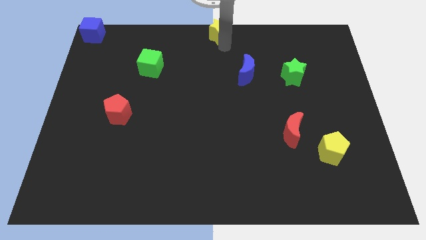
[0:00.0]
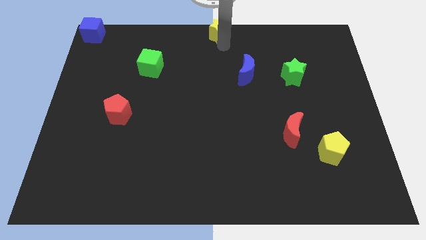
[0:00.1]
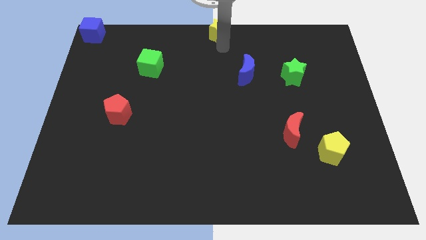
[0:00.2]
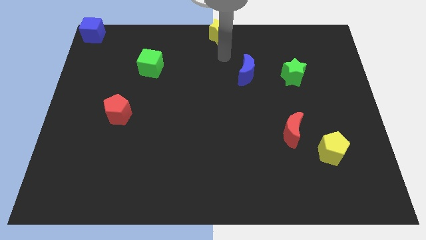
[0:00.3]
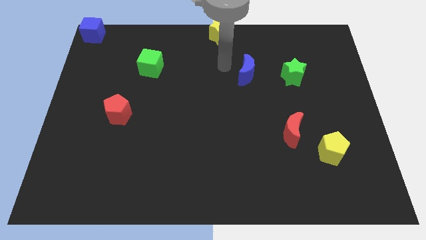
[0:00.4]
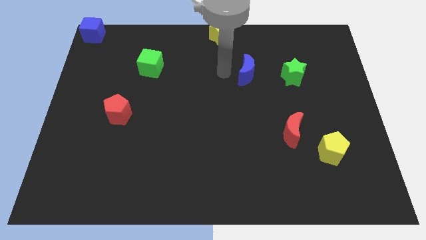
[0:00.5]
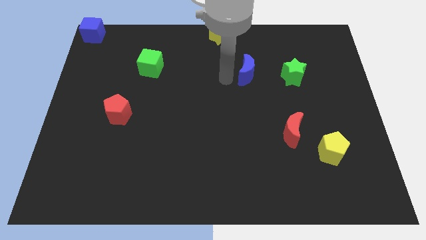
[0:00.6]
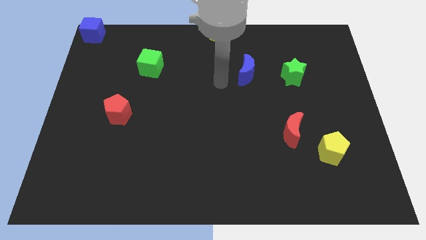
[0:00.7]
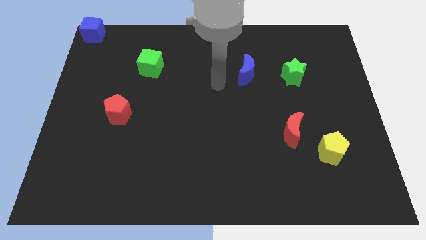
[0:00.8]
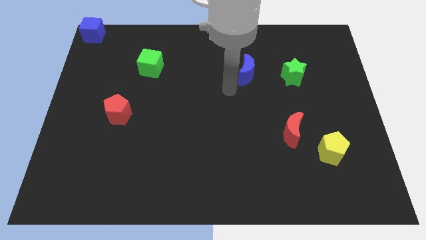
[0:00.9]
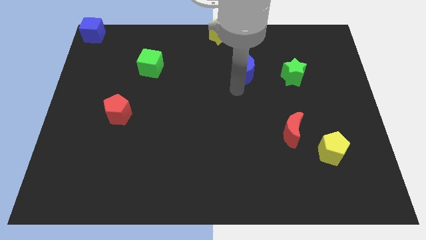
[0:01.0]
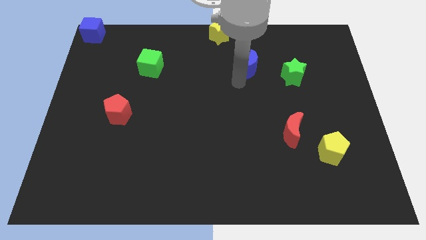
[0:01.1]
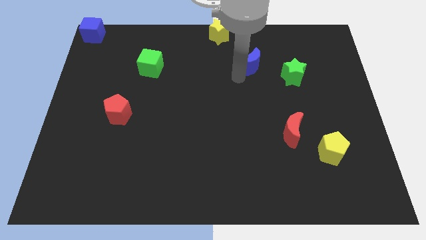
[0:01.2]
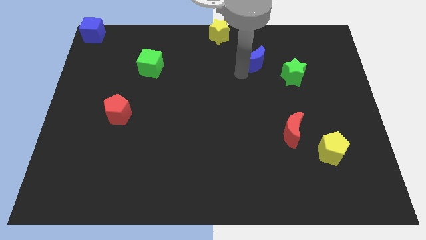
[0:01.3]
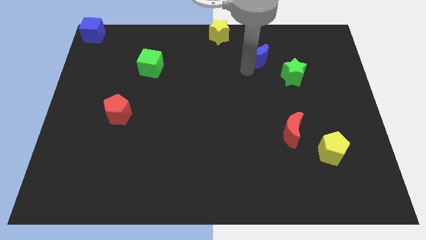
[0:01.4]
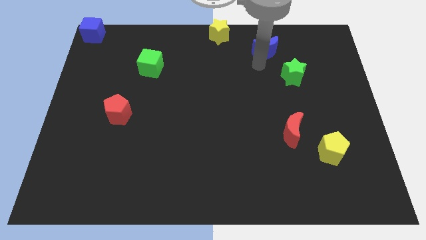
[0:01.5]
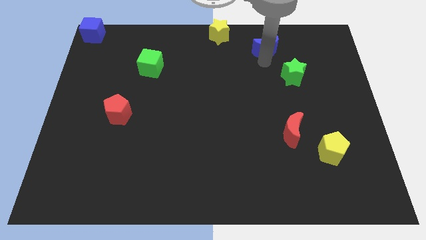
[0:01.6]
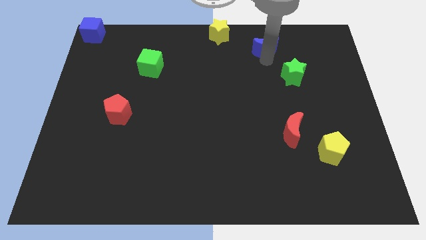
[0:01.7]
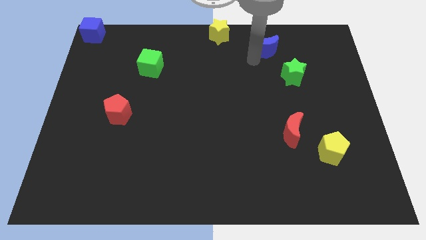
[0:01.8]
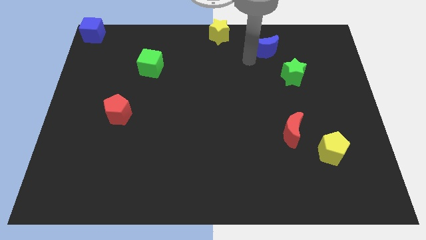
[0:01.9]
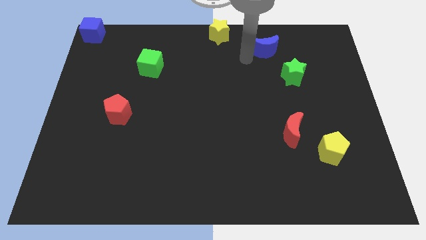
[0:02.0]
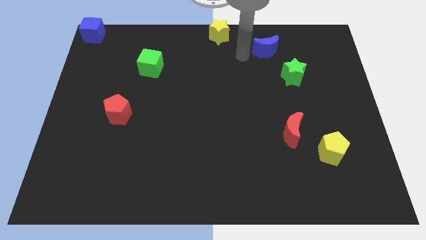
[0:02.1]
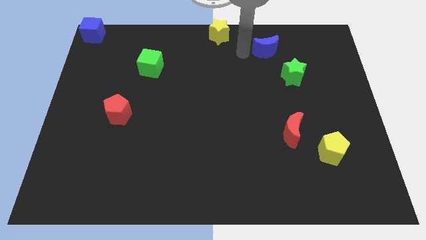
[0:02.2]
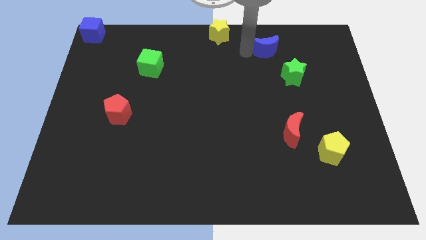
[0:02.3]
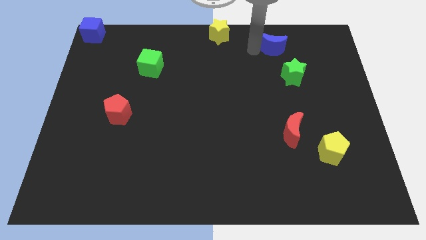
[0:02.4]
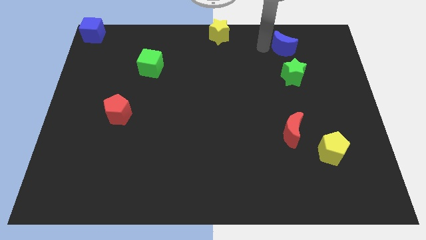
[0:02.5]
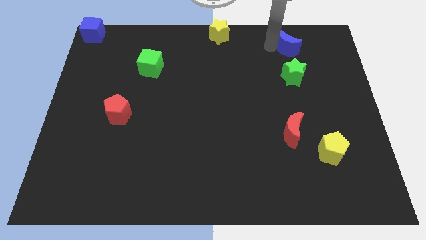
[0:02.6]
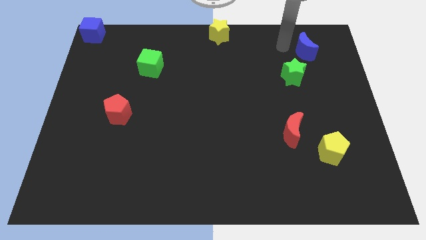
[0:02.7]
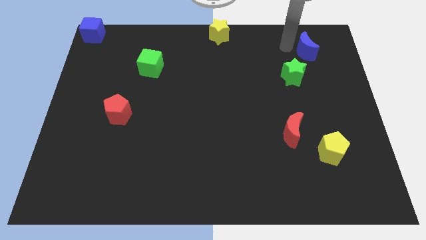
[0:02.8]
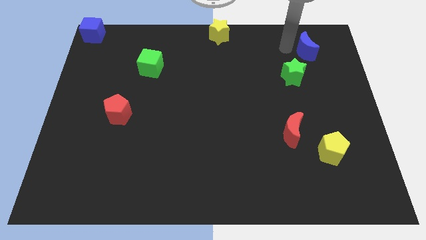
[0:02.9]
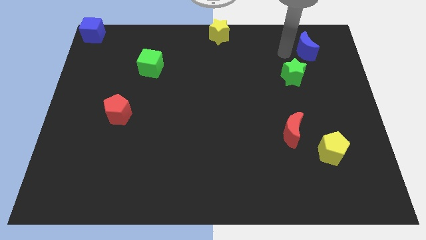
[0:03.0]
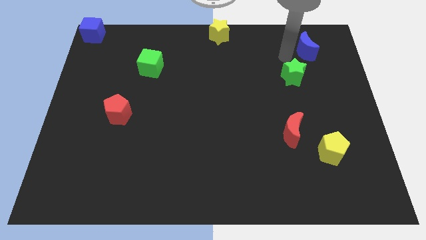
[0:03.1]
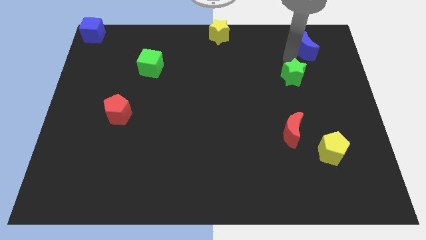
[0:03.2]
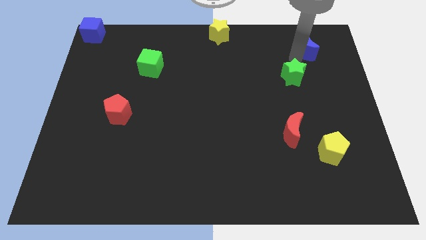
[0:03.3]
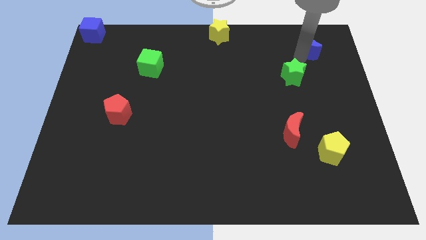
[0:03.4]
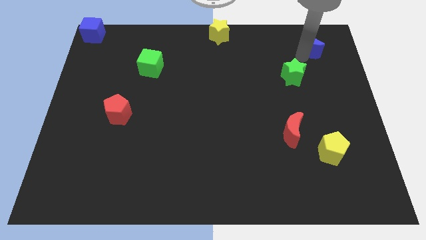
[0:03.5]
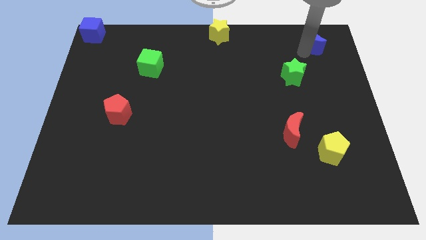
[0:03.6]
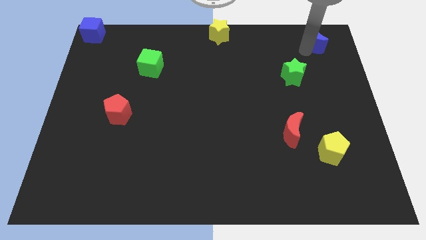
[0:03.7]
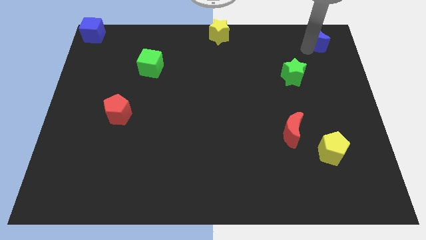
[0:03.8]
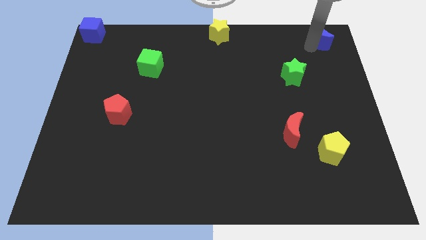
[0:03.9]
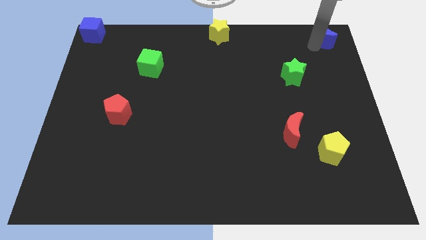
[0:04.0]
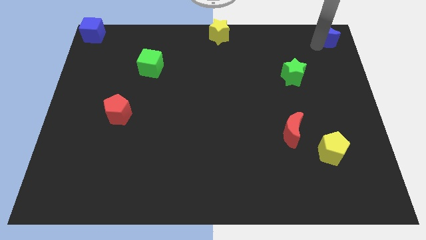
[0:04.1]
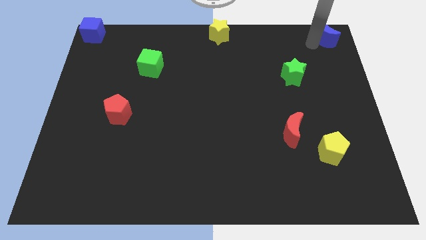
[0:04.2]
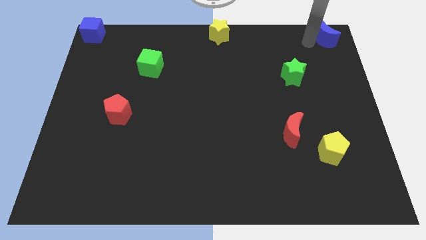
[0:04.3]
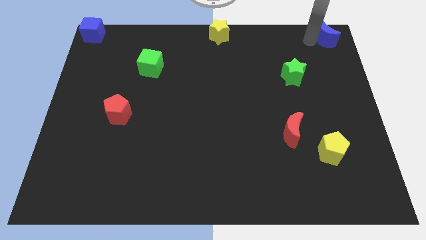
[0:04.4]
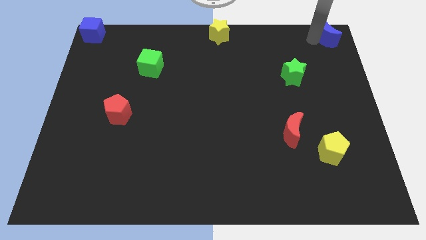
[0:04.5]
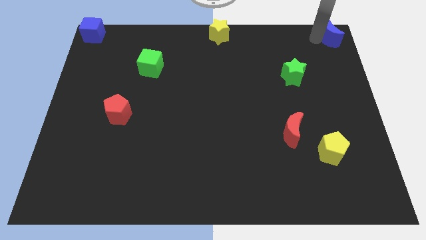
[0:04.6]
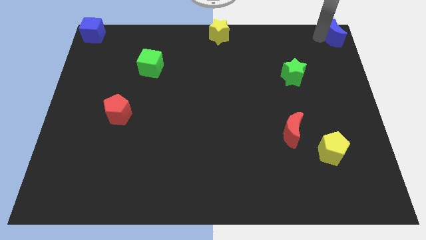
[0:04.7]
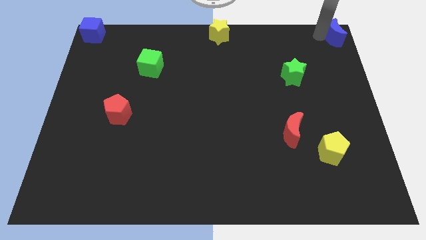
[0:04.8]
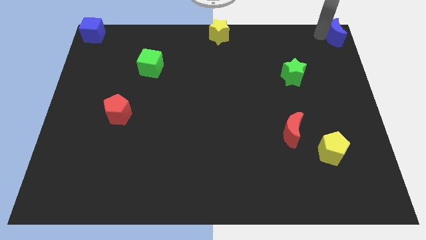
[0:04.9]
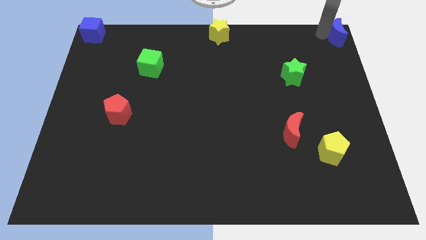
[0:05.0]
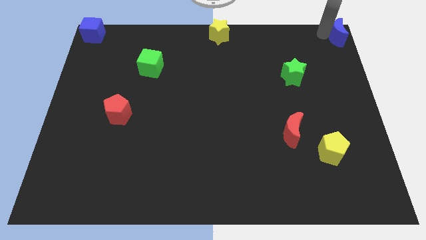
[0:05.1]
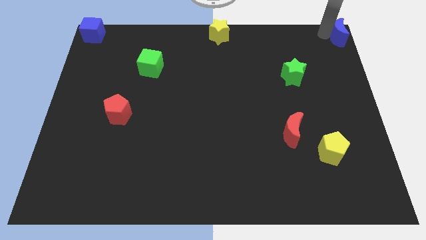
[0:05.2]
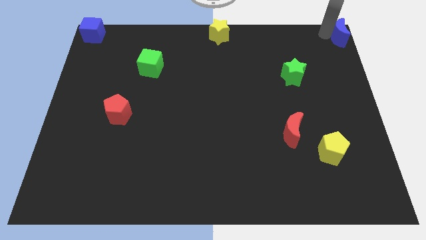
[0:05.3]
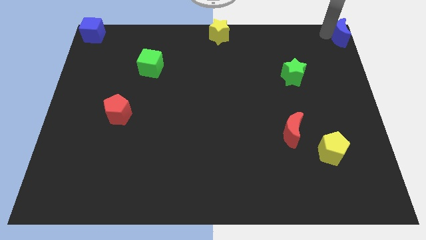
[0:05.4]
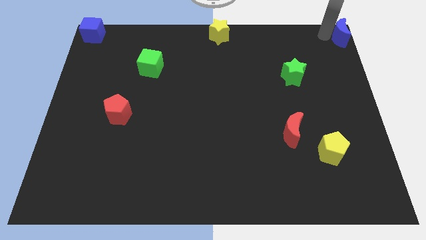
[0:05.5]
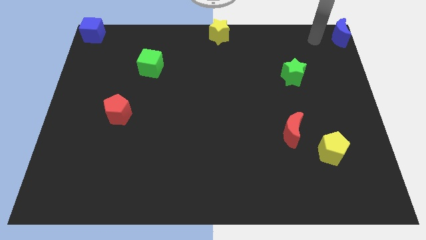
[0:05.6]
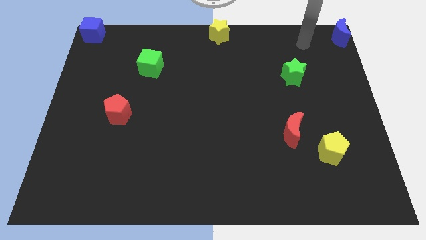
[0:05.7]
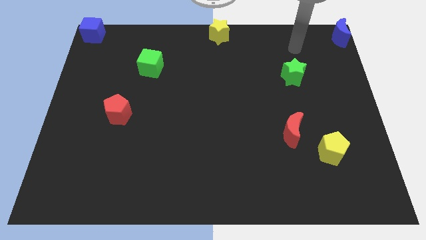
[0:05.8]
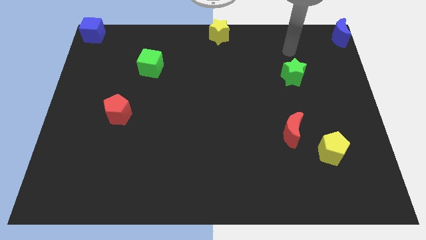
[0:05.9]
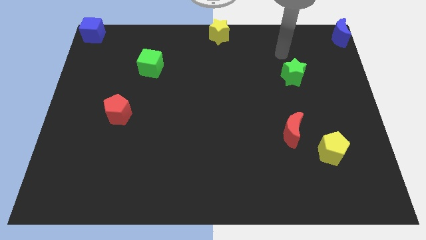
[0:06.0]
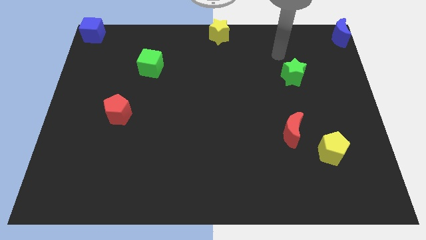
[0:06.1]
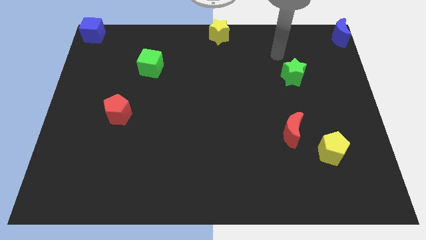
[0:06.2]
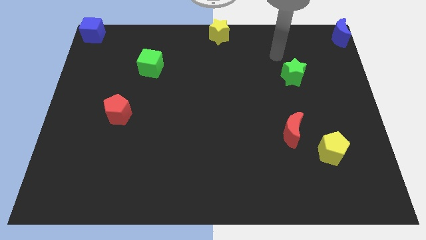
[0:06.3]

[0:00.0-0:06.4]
place the blue moon above the green star

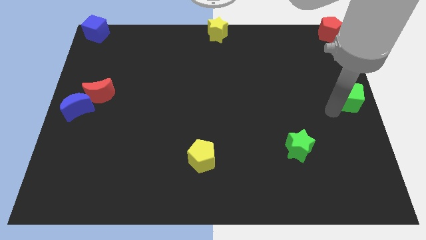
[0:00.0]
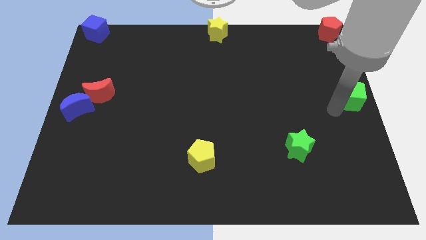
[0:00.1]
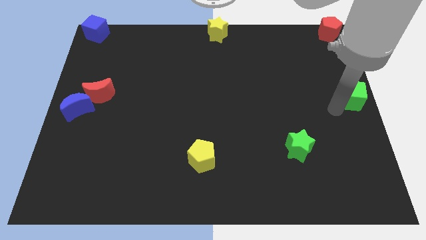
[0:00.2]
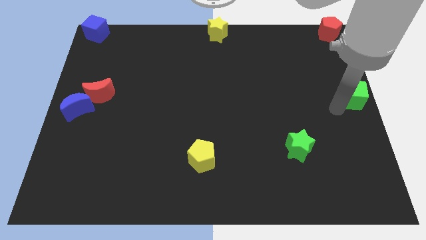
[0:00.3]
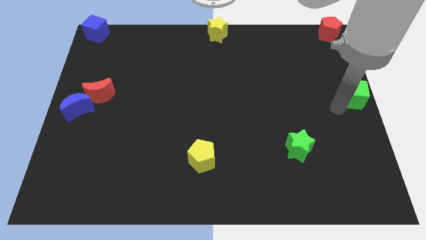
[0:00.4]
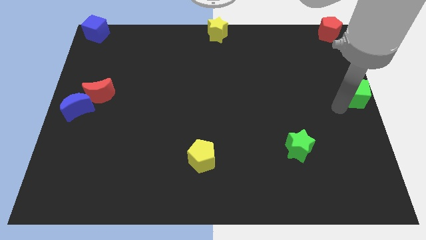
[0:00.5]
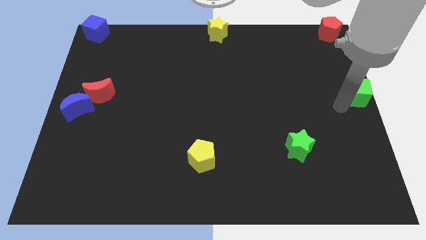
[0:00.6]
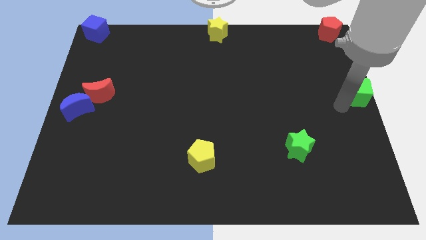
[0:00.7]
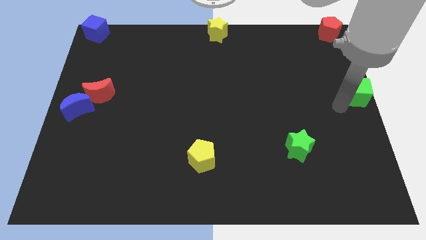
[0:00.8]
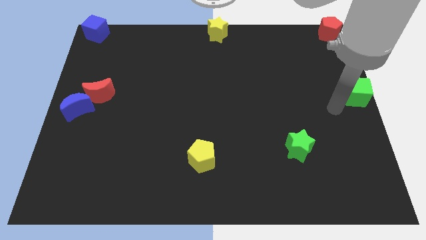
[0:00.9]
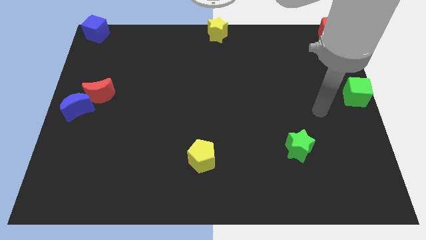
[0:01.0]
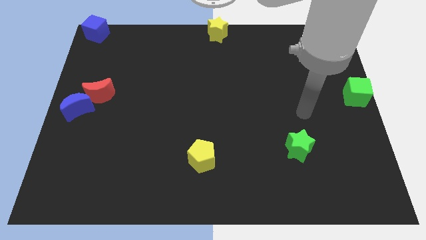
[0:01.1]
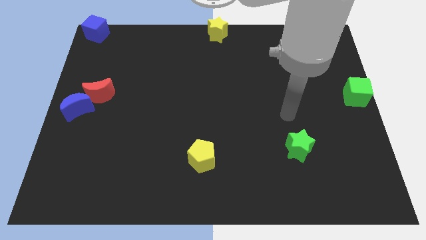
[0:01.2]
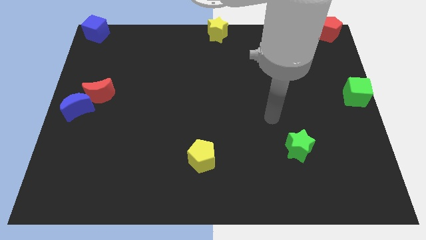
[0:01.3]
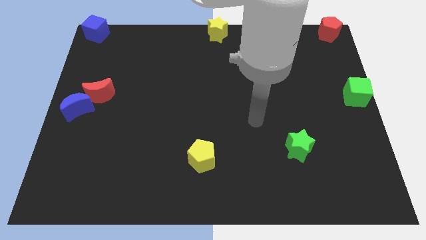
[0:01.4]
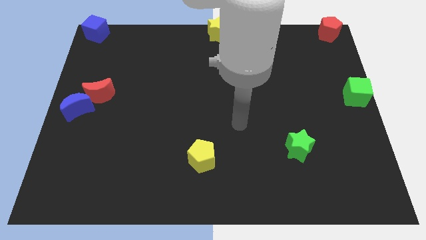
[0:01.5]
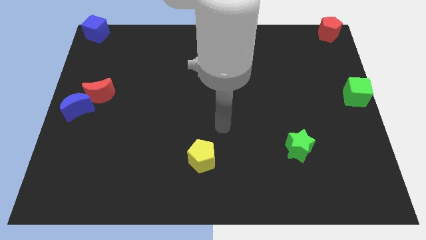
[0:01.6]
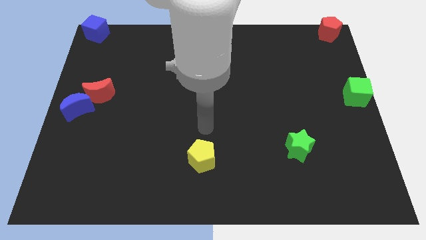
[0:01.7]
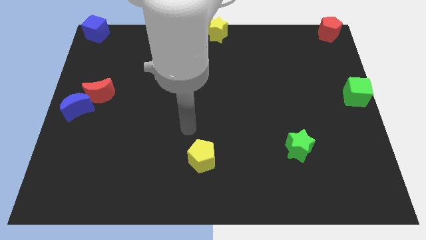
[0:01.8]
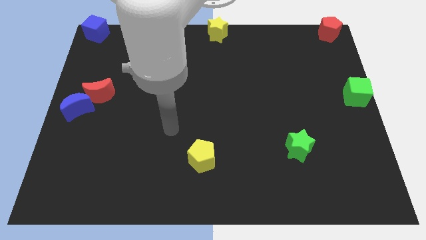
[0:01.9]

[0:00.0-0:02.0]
place the green cube at the right center of the board

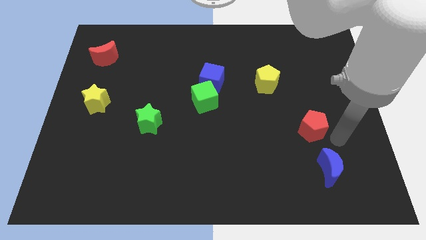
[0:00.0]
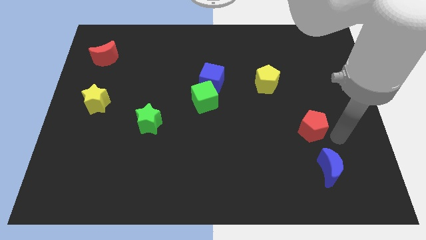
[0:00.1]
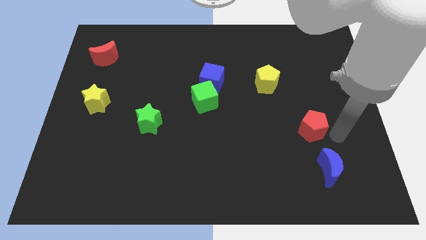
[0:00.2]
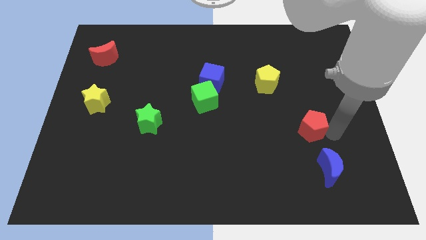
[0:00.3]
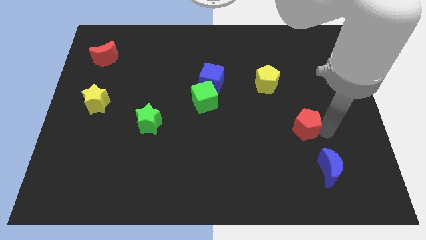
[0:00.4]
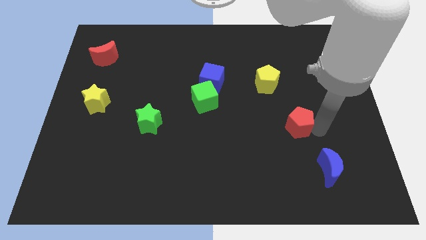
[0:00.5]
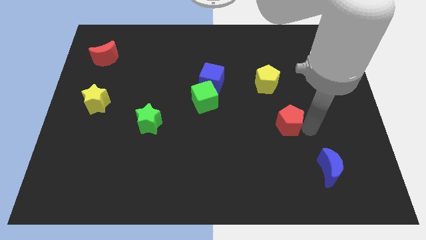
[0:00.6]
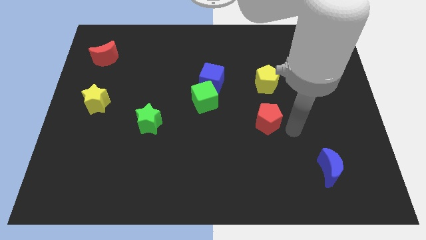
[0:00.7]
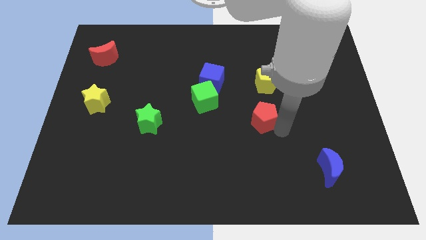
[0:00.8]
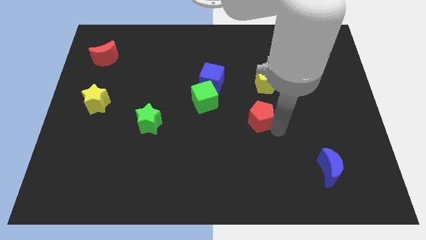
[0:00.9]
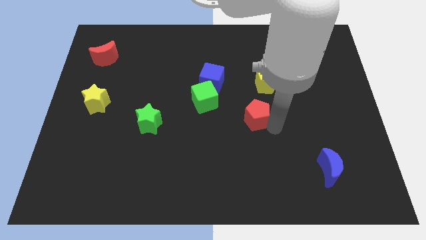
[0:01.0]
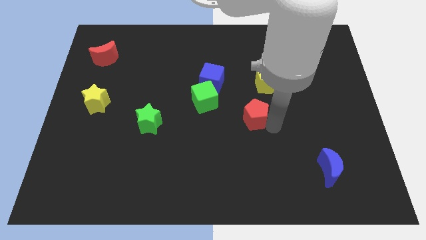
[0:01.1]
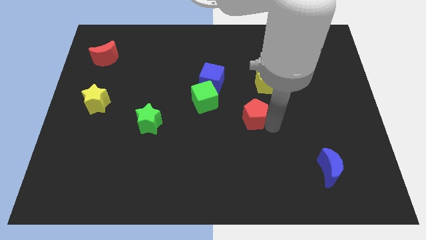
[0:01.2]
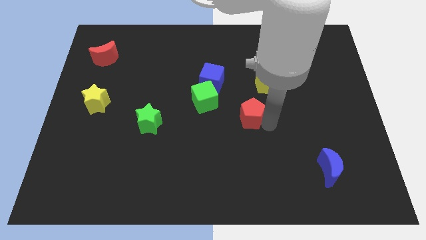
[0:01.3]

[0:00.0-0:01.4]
push the red pentagon towards the center of the board
